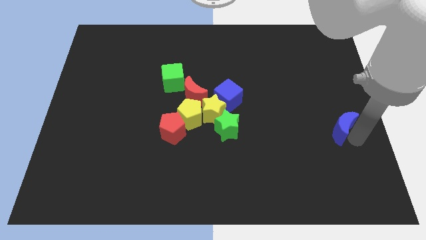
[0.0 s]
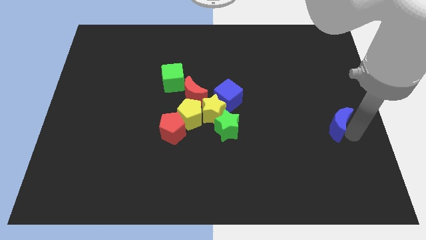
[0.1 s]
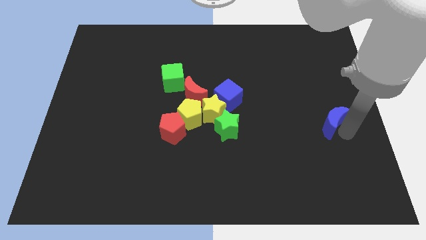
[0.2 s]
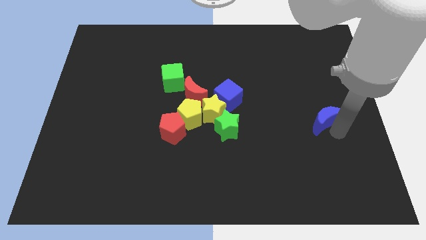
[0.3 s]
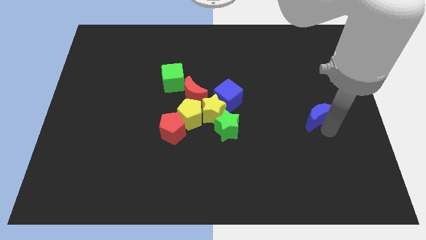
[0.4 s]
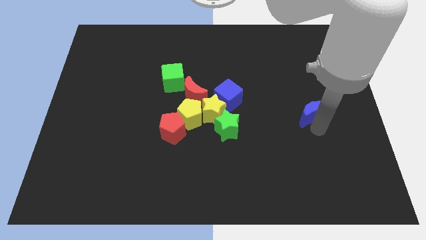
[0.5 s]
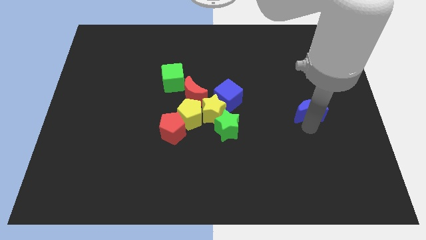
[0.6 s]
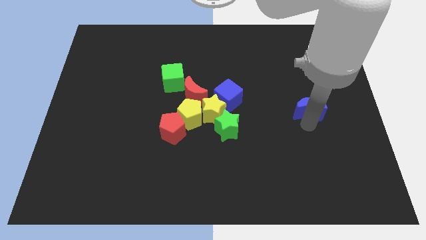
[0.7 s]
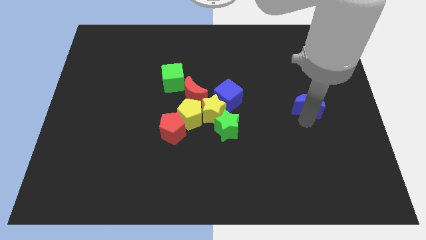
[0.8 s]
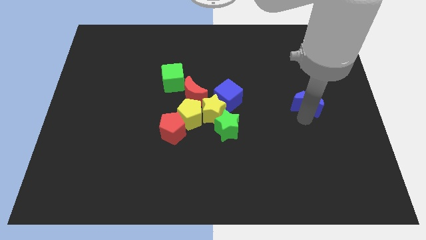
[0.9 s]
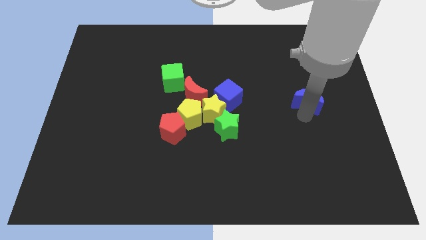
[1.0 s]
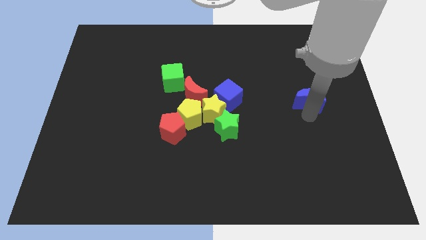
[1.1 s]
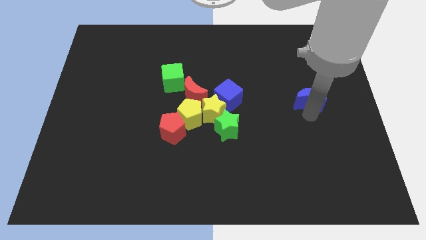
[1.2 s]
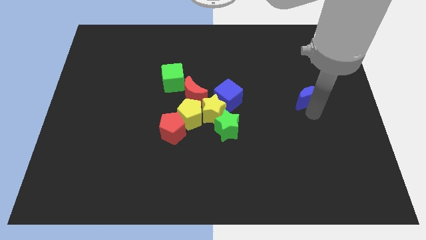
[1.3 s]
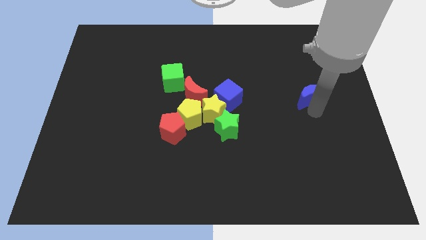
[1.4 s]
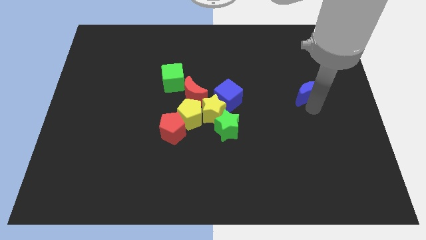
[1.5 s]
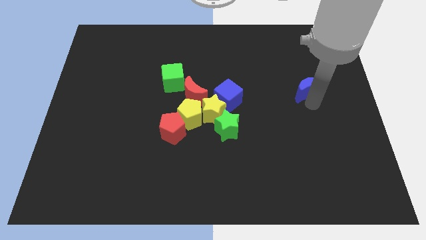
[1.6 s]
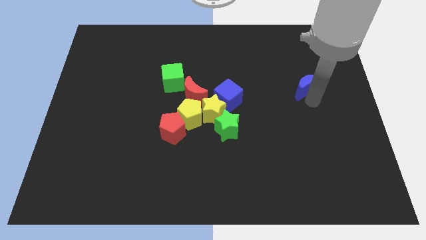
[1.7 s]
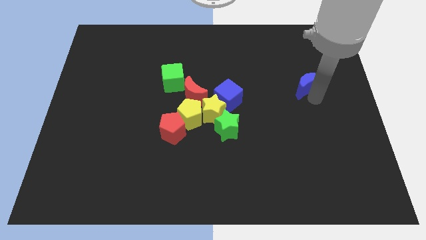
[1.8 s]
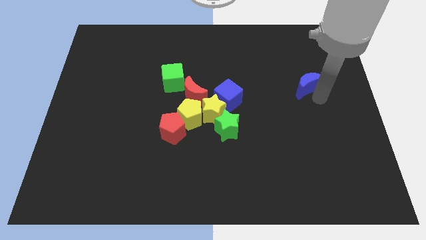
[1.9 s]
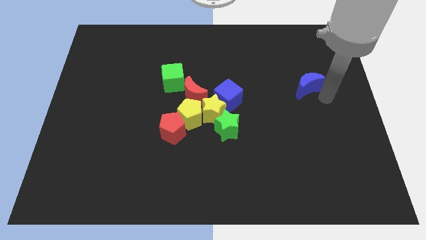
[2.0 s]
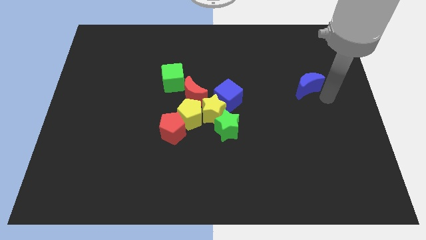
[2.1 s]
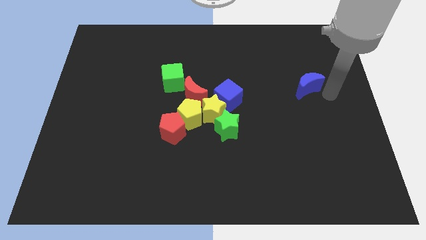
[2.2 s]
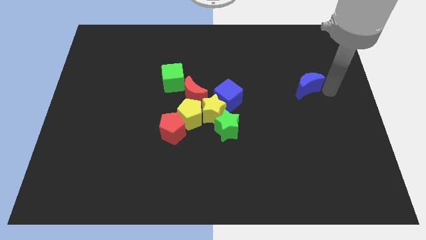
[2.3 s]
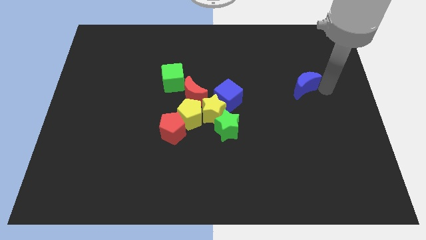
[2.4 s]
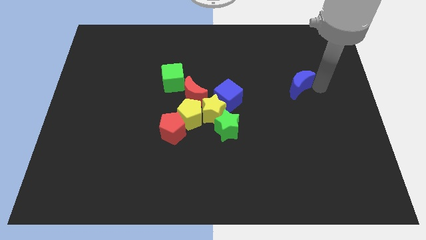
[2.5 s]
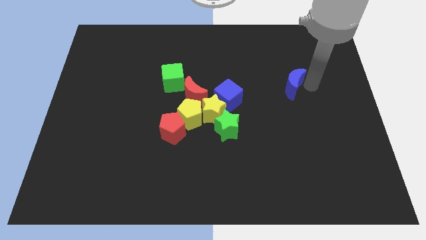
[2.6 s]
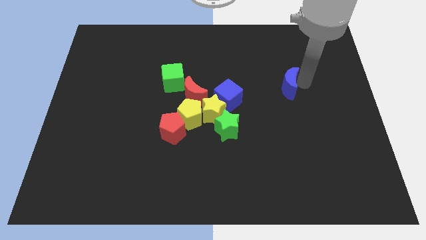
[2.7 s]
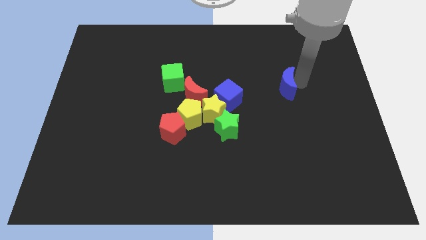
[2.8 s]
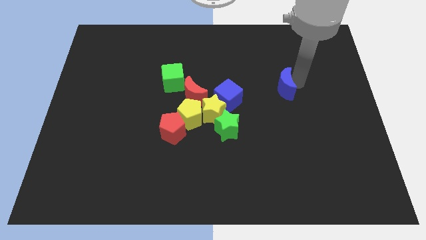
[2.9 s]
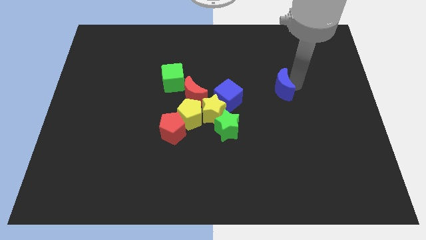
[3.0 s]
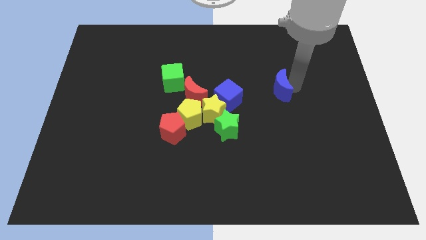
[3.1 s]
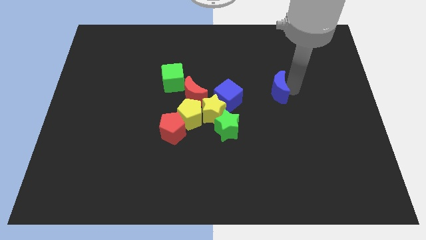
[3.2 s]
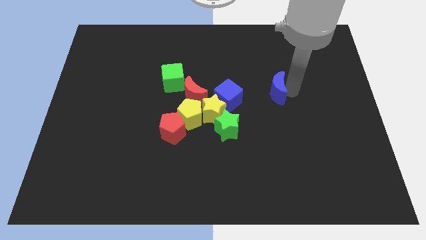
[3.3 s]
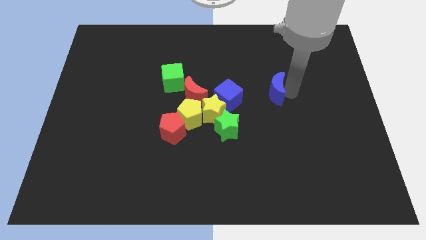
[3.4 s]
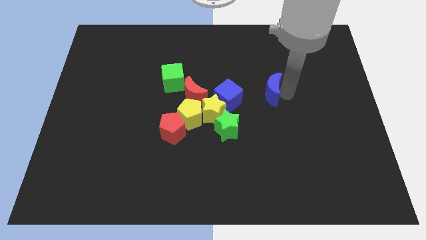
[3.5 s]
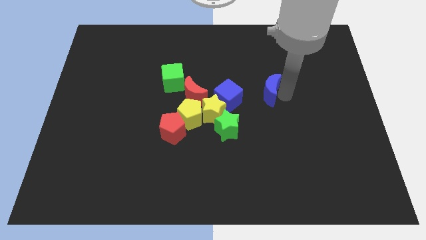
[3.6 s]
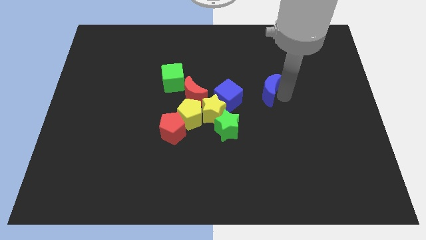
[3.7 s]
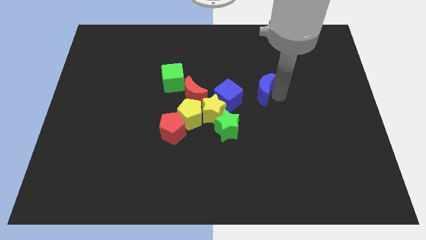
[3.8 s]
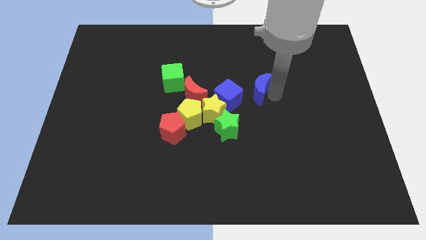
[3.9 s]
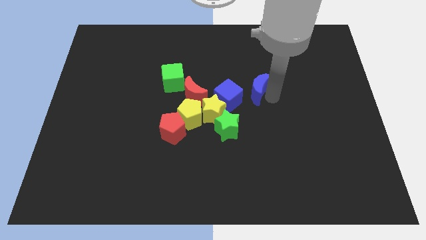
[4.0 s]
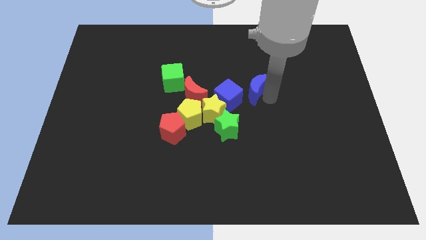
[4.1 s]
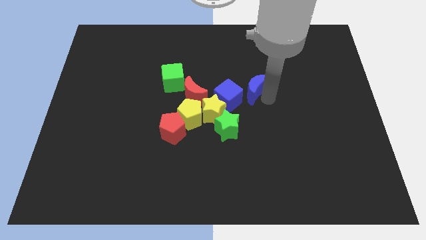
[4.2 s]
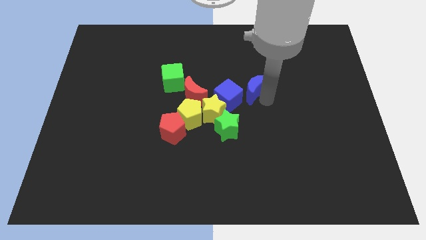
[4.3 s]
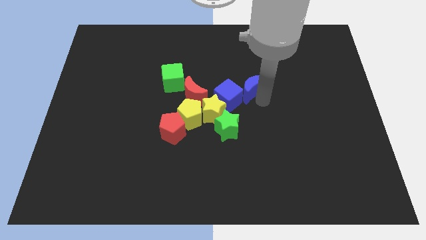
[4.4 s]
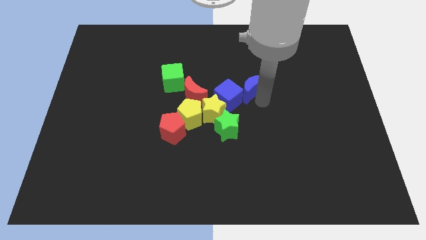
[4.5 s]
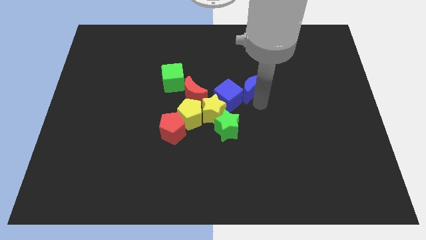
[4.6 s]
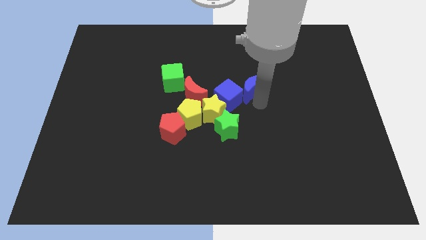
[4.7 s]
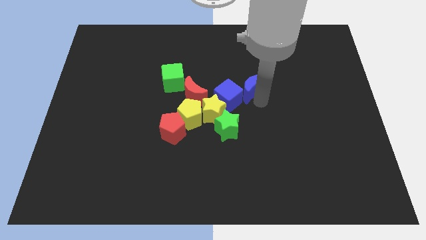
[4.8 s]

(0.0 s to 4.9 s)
move the blue crescent right to the blue cube

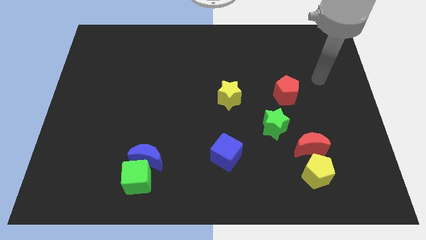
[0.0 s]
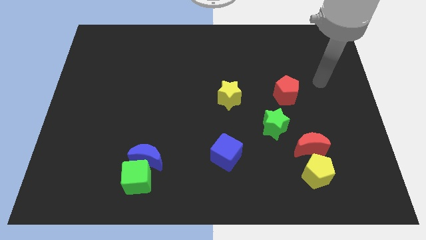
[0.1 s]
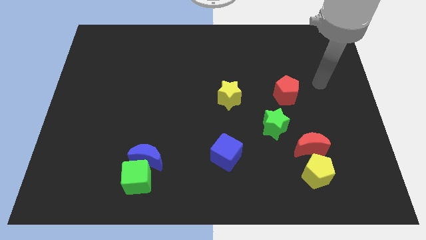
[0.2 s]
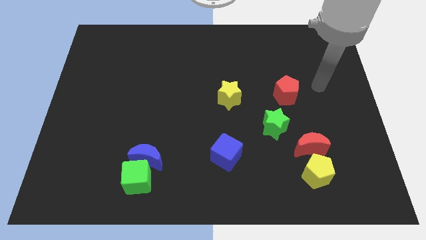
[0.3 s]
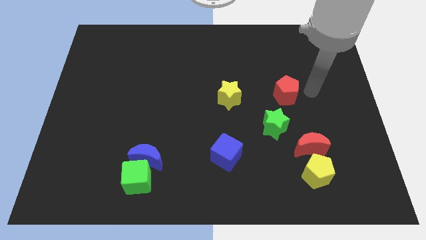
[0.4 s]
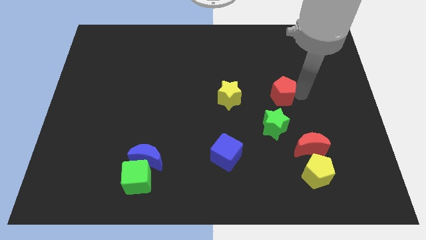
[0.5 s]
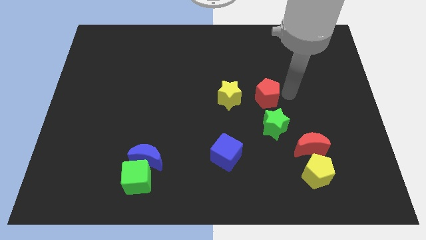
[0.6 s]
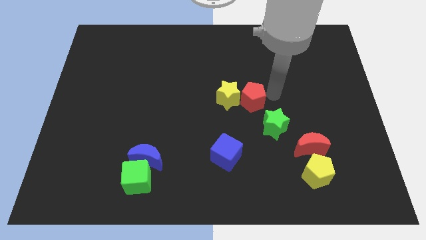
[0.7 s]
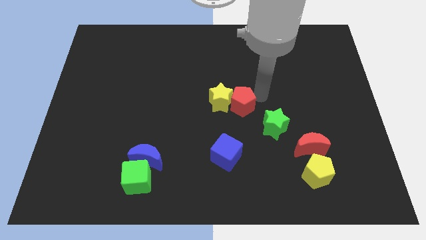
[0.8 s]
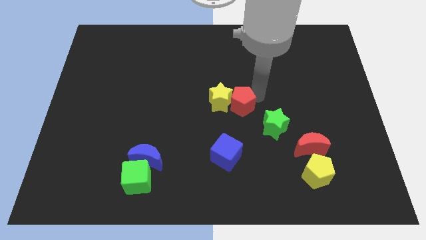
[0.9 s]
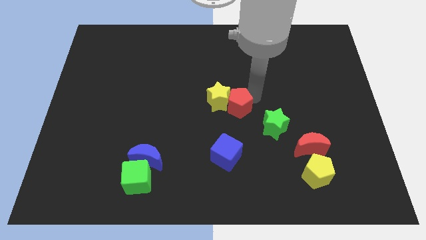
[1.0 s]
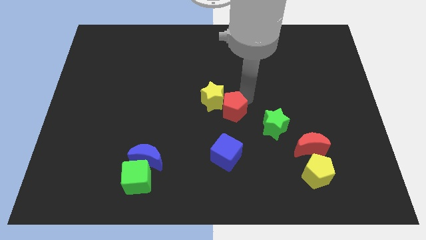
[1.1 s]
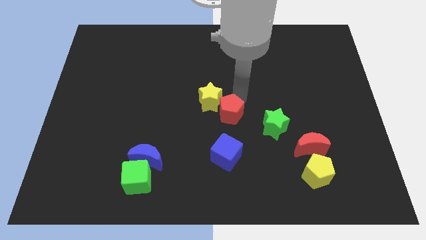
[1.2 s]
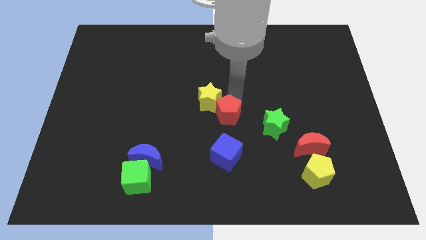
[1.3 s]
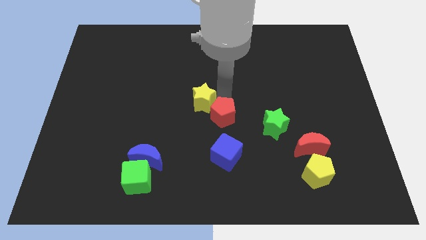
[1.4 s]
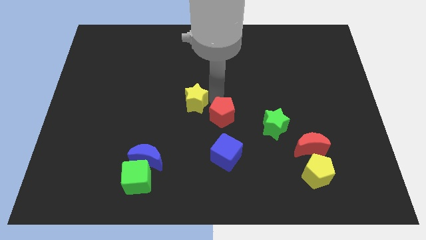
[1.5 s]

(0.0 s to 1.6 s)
place the red pentagon on the top of the blue cube

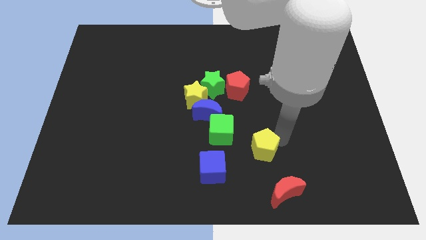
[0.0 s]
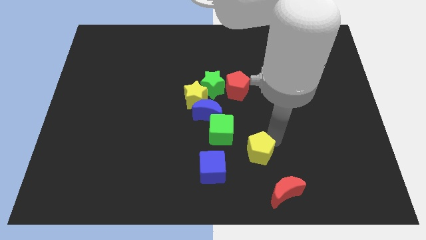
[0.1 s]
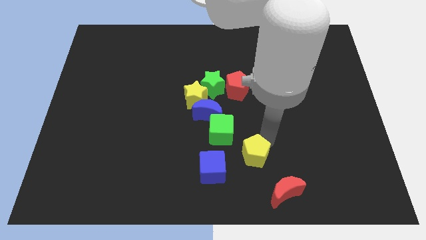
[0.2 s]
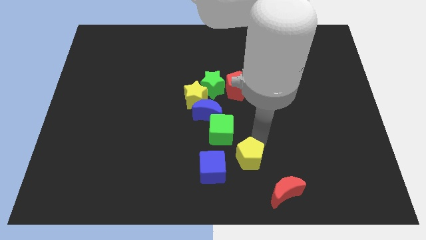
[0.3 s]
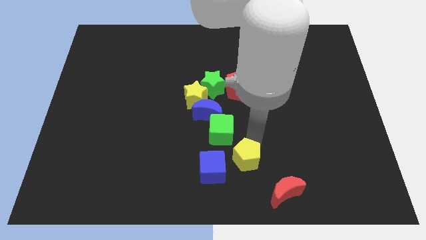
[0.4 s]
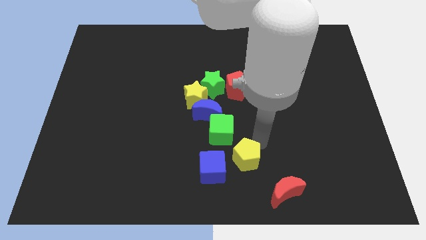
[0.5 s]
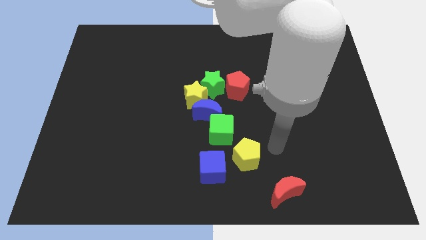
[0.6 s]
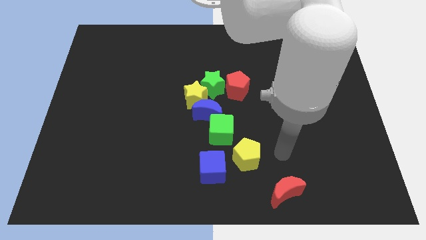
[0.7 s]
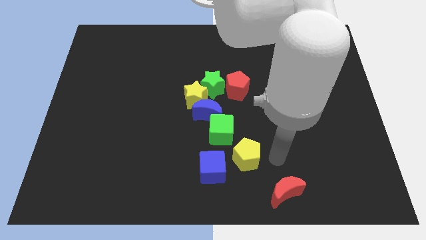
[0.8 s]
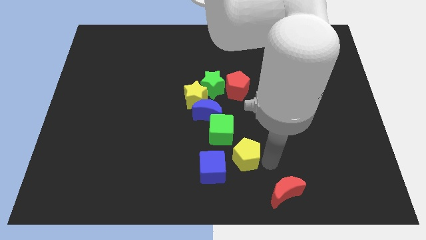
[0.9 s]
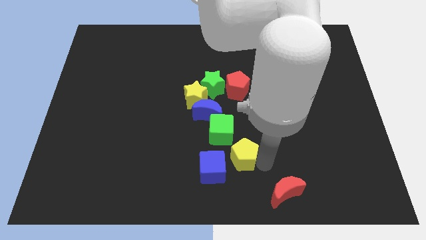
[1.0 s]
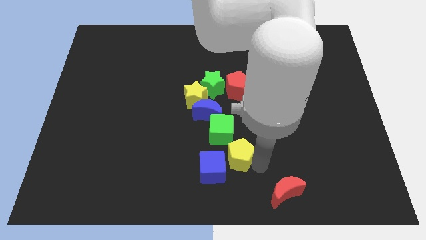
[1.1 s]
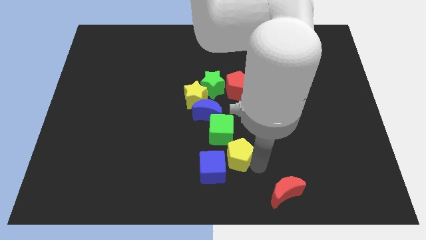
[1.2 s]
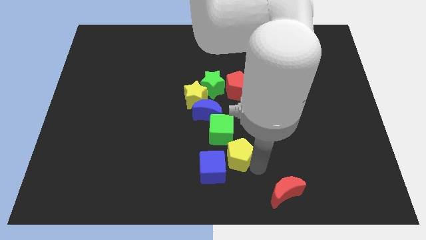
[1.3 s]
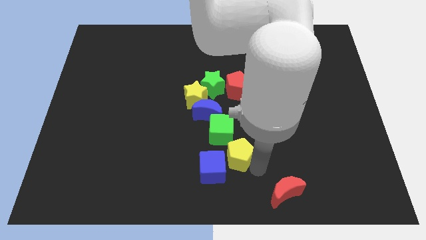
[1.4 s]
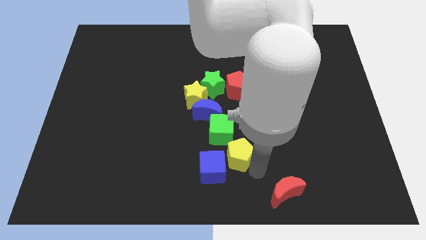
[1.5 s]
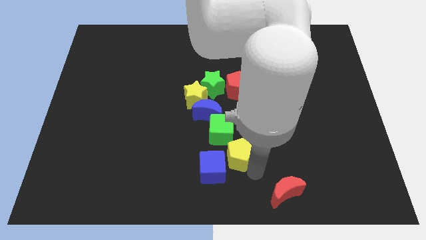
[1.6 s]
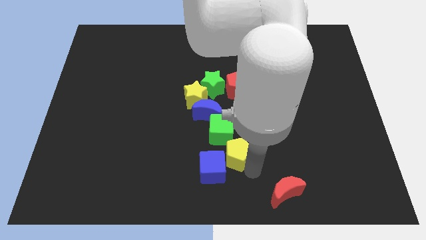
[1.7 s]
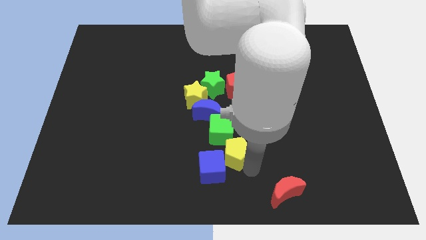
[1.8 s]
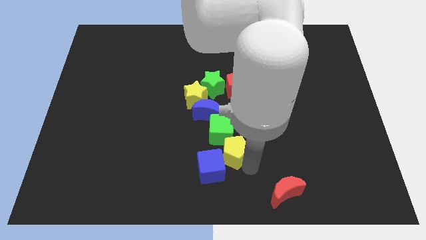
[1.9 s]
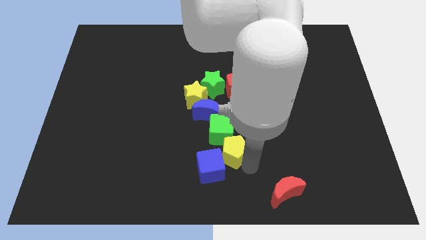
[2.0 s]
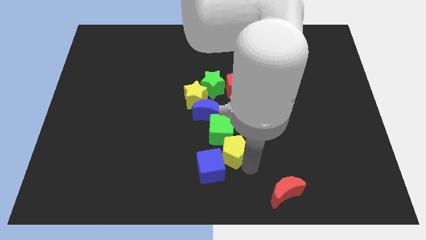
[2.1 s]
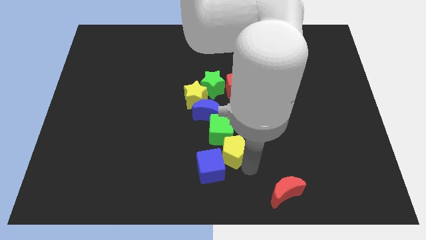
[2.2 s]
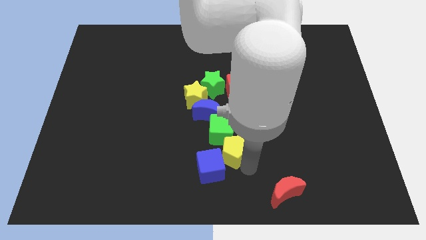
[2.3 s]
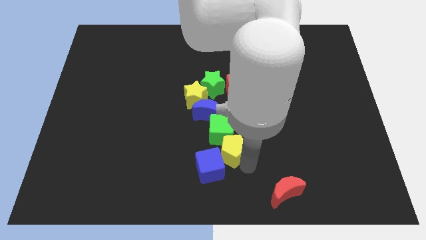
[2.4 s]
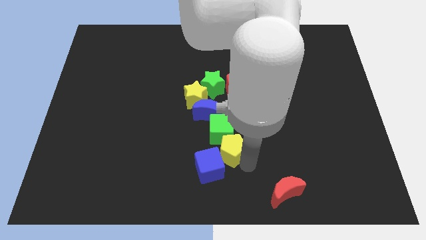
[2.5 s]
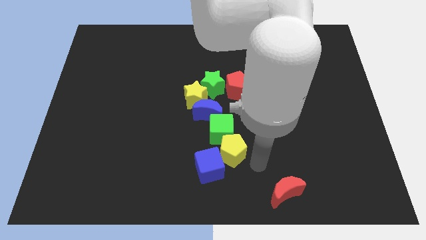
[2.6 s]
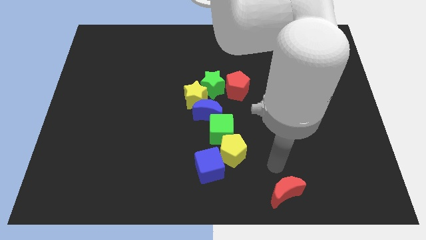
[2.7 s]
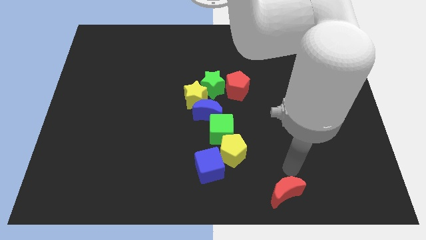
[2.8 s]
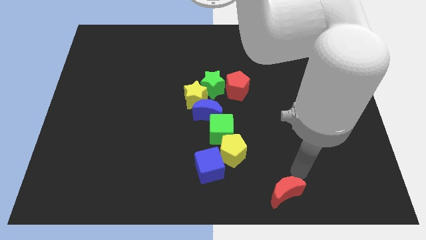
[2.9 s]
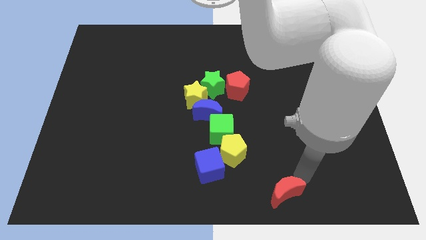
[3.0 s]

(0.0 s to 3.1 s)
push the yellow pentagon into the blue cube
